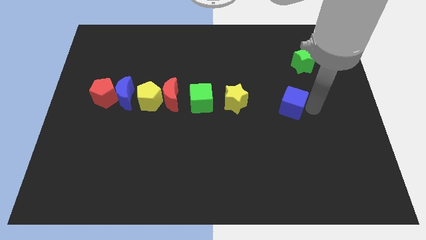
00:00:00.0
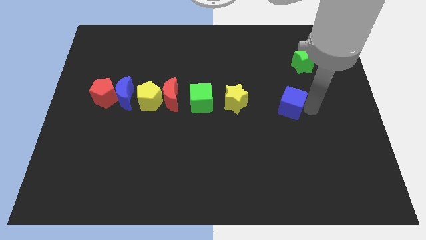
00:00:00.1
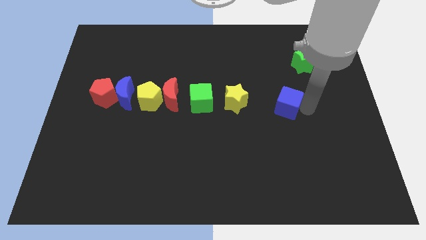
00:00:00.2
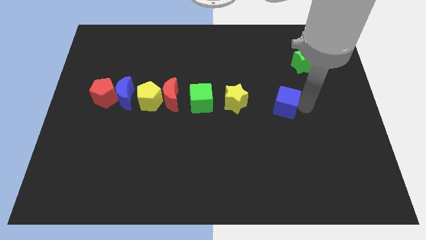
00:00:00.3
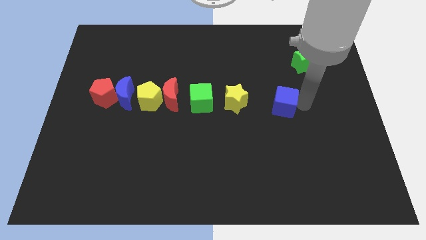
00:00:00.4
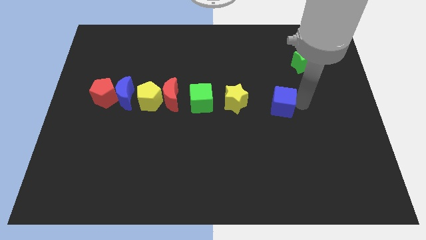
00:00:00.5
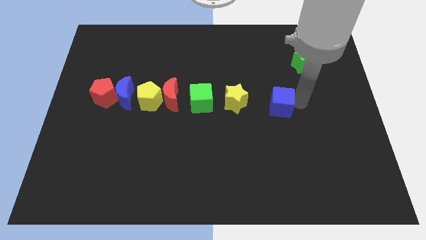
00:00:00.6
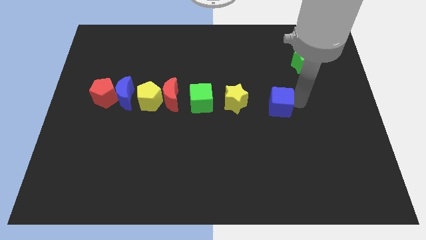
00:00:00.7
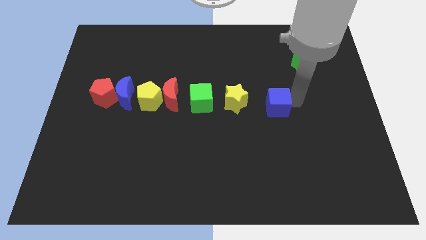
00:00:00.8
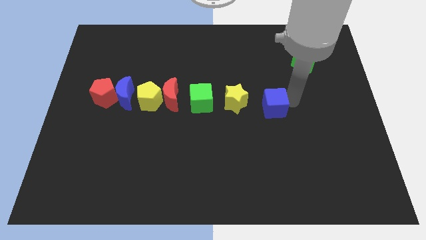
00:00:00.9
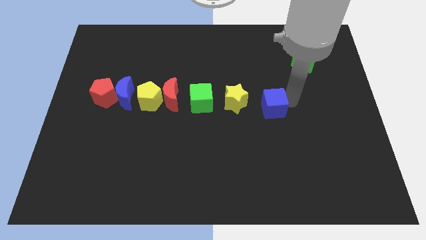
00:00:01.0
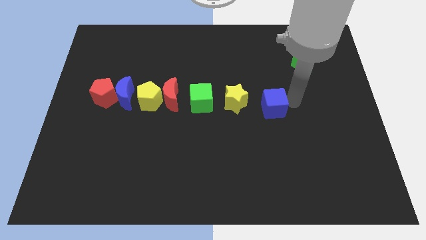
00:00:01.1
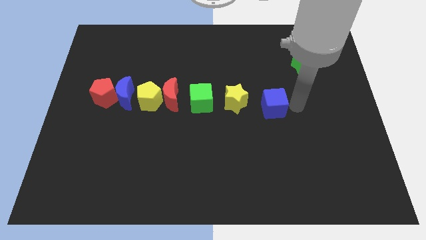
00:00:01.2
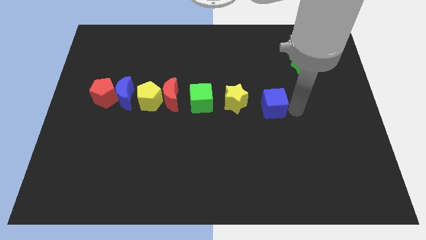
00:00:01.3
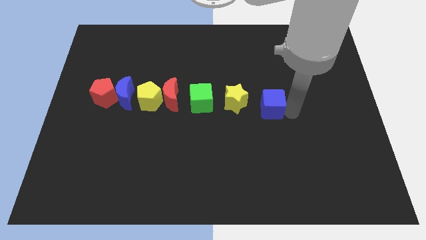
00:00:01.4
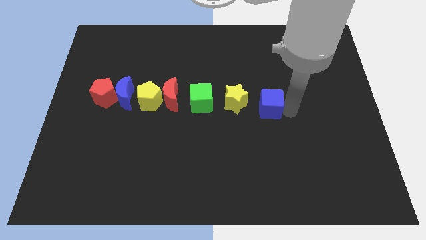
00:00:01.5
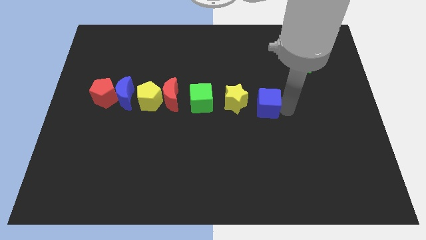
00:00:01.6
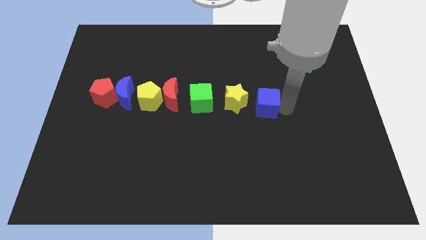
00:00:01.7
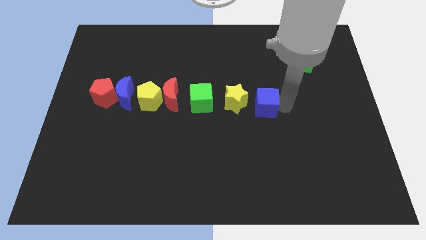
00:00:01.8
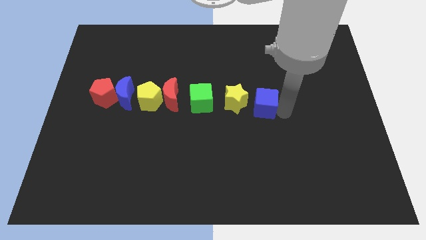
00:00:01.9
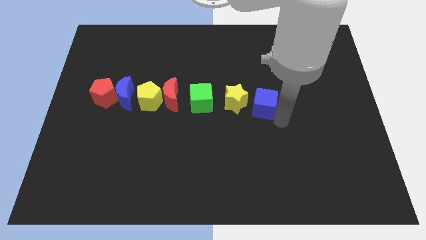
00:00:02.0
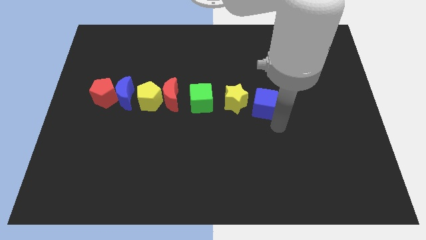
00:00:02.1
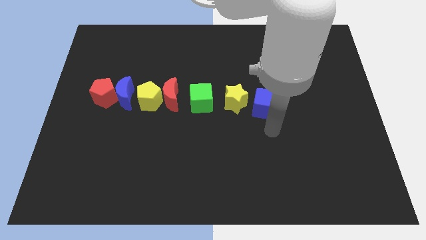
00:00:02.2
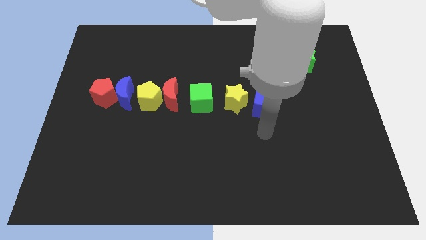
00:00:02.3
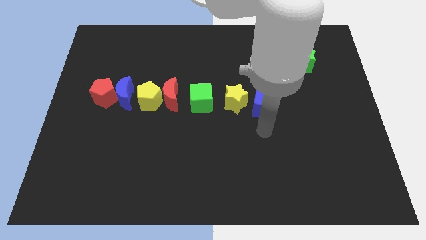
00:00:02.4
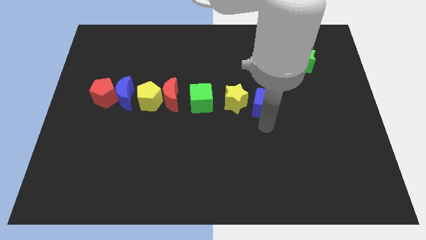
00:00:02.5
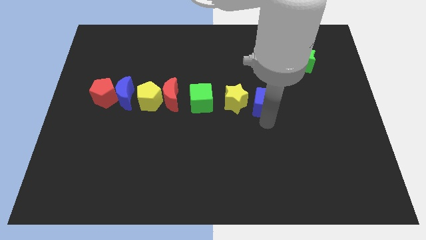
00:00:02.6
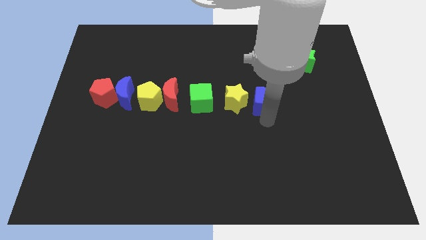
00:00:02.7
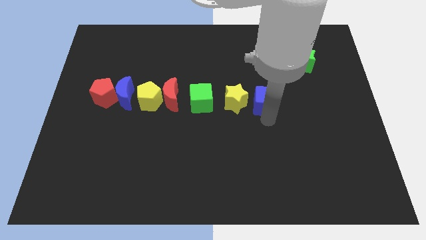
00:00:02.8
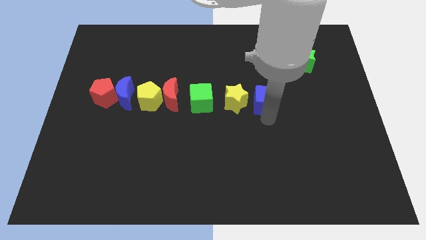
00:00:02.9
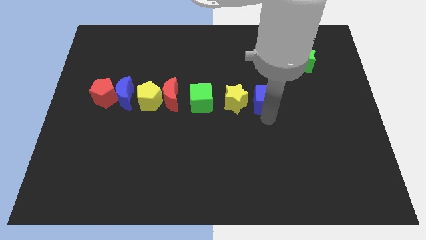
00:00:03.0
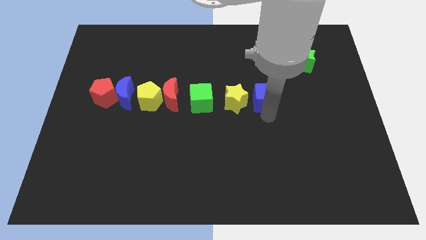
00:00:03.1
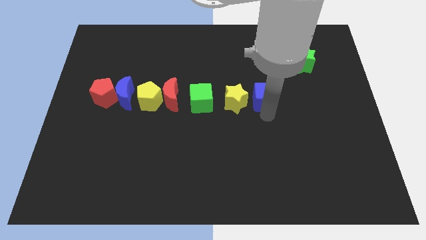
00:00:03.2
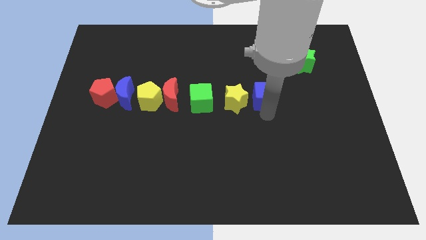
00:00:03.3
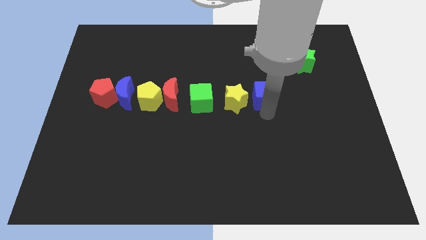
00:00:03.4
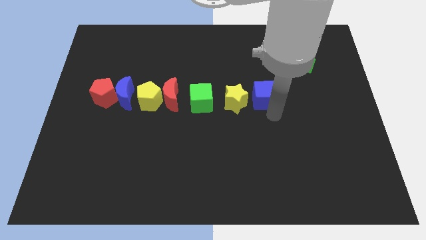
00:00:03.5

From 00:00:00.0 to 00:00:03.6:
put the blue cube to the right side of yellow star

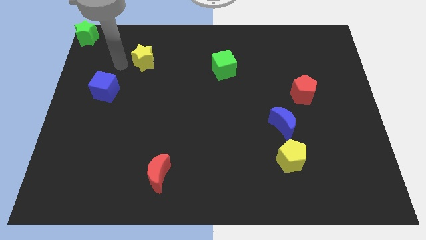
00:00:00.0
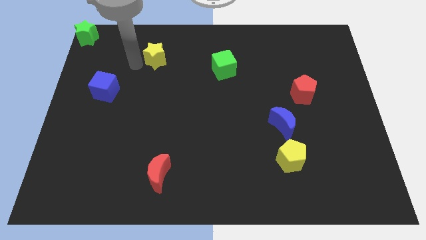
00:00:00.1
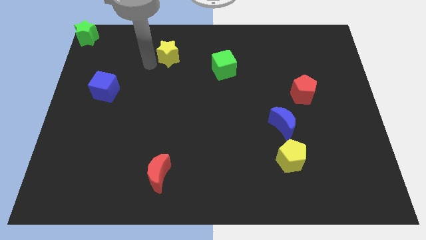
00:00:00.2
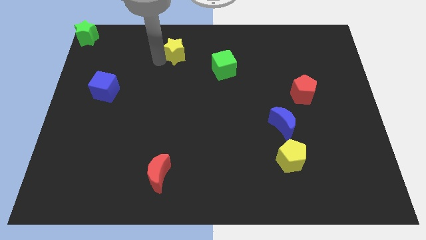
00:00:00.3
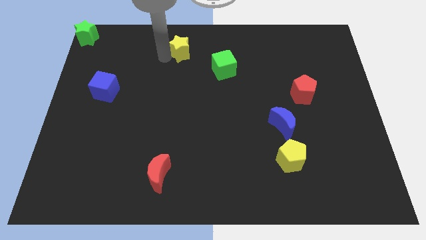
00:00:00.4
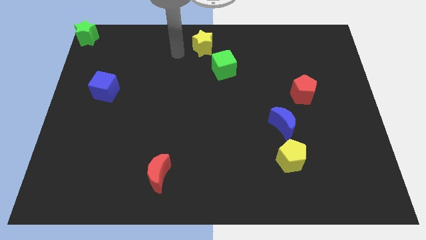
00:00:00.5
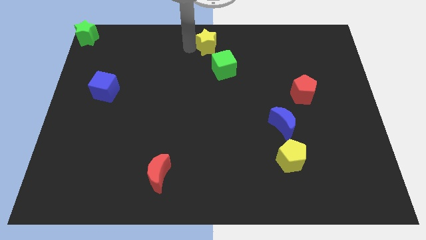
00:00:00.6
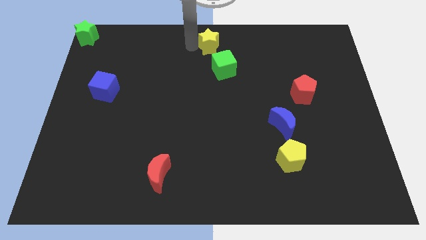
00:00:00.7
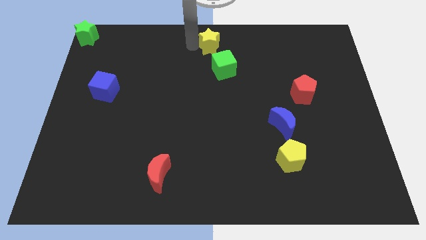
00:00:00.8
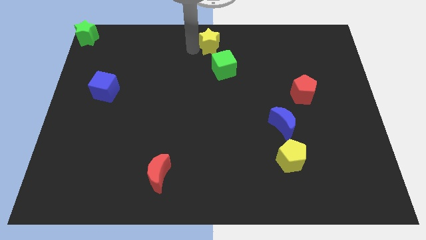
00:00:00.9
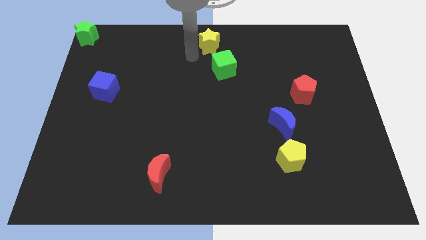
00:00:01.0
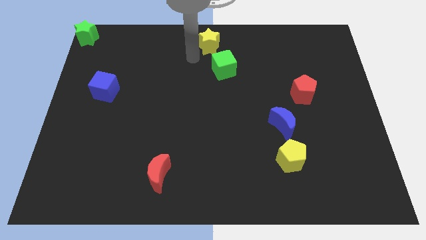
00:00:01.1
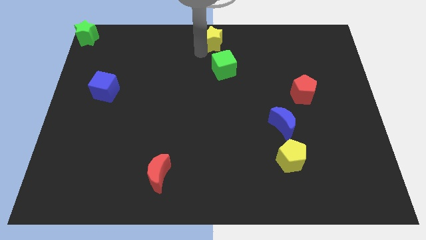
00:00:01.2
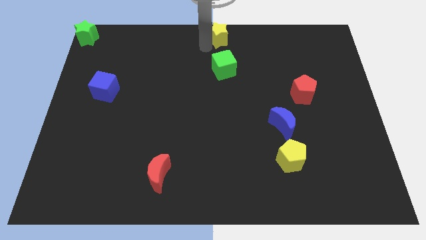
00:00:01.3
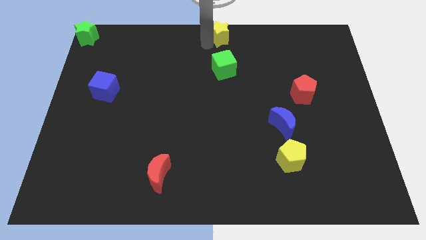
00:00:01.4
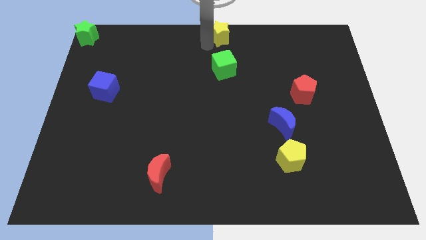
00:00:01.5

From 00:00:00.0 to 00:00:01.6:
move the yellow star to the top center
